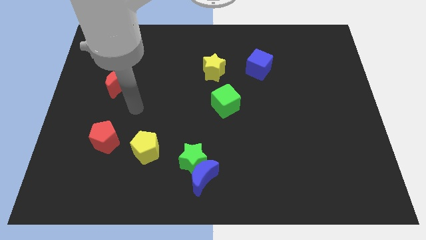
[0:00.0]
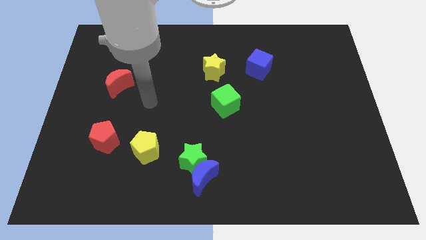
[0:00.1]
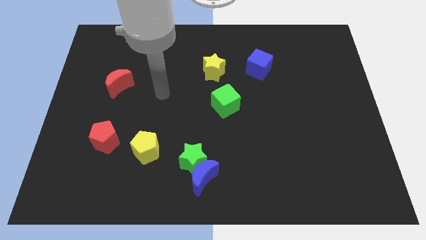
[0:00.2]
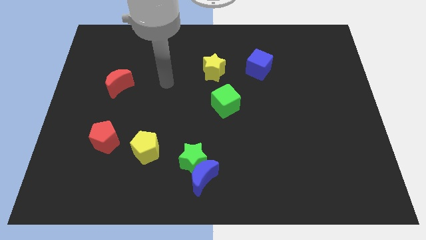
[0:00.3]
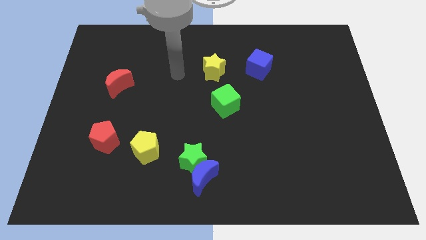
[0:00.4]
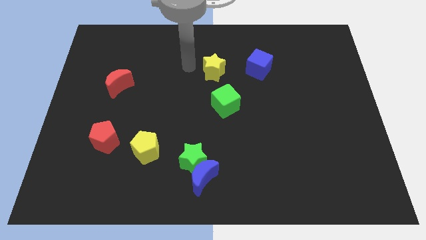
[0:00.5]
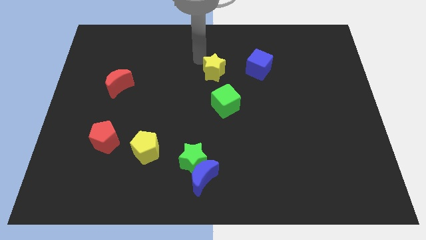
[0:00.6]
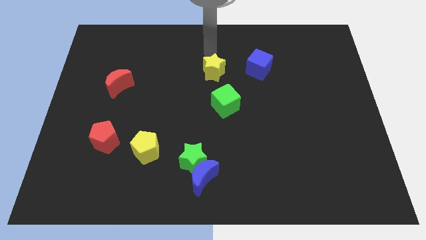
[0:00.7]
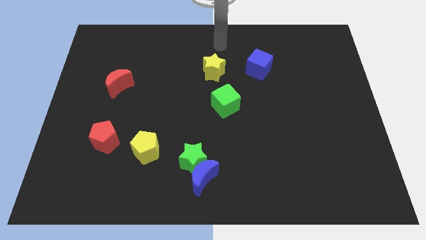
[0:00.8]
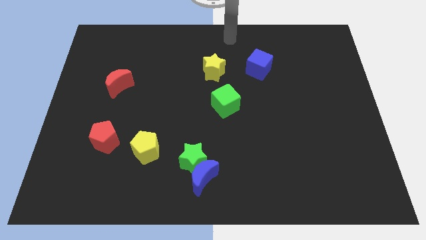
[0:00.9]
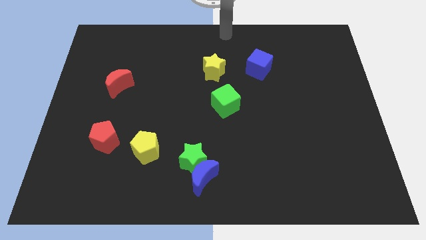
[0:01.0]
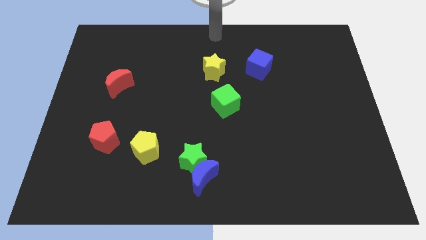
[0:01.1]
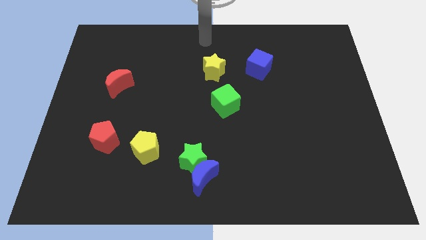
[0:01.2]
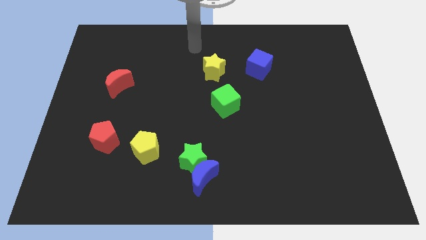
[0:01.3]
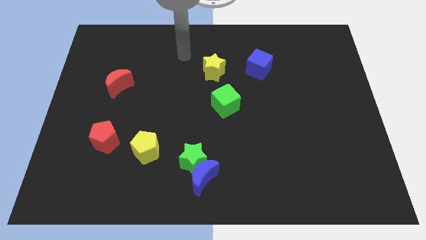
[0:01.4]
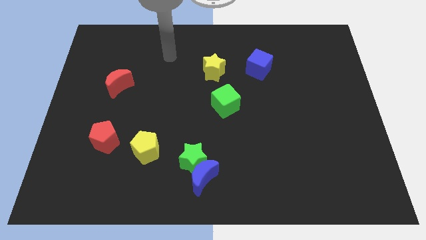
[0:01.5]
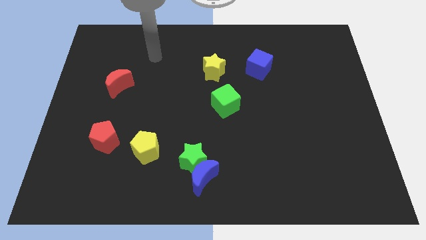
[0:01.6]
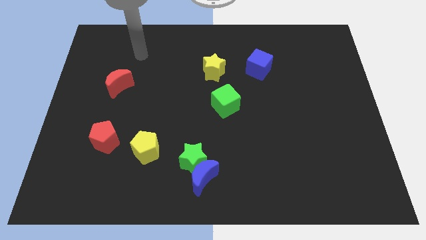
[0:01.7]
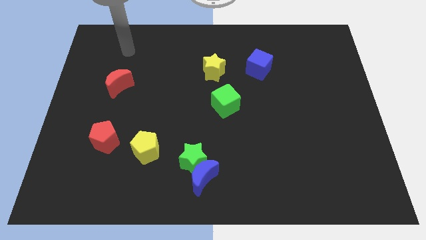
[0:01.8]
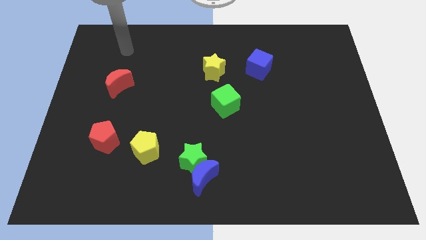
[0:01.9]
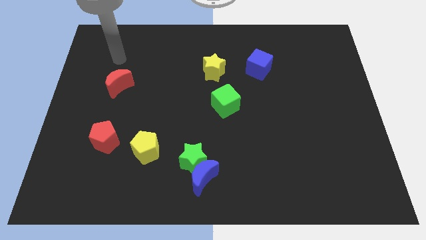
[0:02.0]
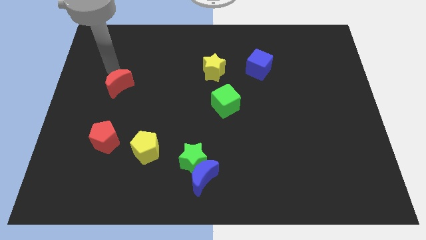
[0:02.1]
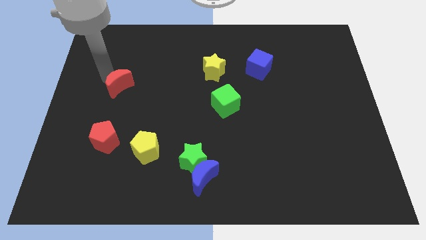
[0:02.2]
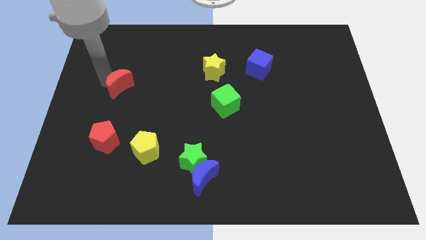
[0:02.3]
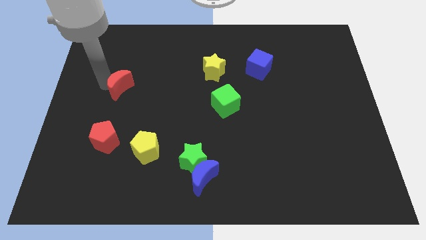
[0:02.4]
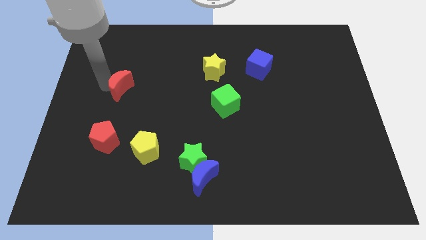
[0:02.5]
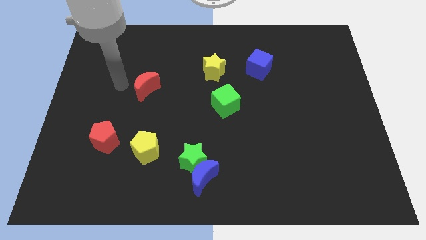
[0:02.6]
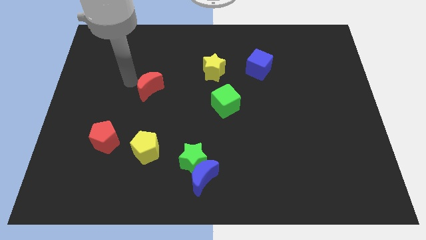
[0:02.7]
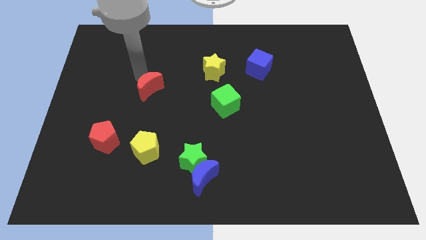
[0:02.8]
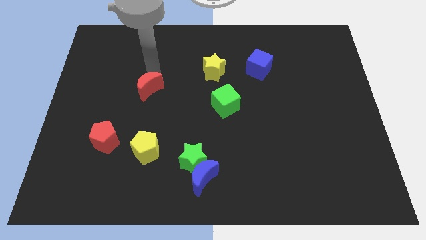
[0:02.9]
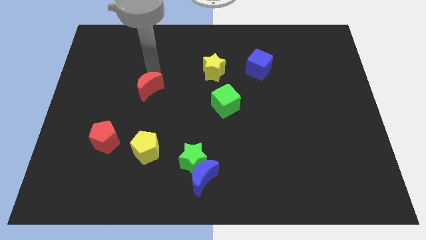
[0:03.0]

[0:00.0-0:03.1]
put the red crescent vertically at the top side of the yellow pentagon

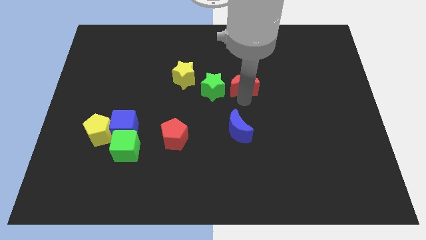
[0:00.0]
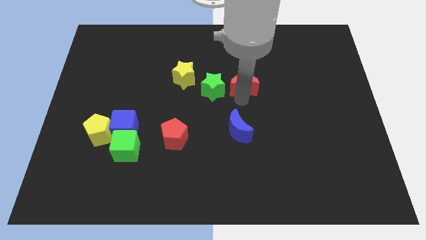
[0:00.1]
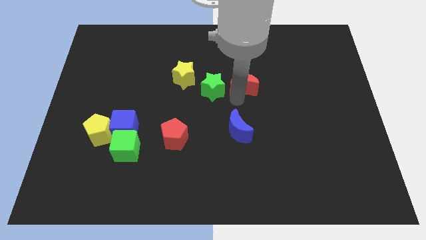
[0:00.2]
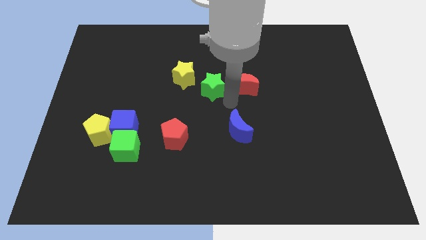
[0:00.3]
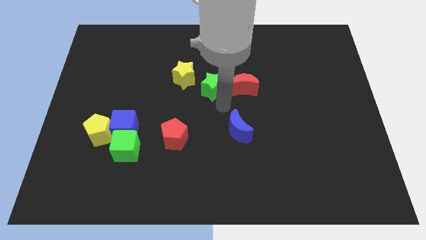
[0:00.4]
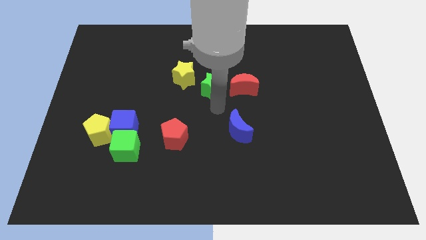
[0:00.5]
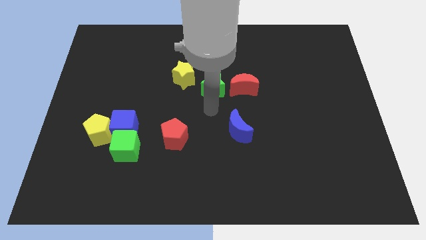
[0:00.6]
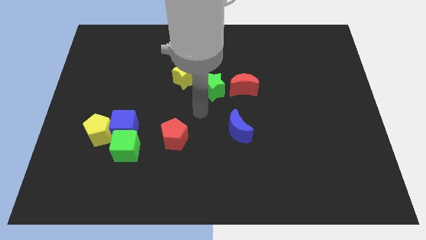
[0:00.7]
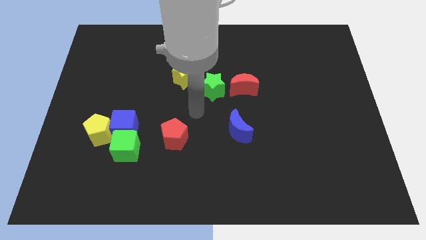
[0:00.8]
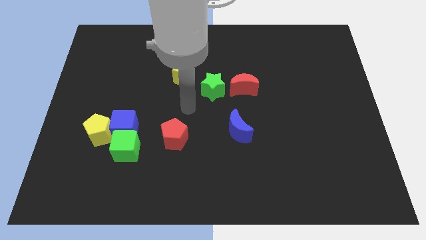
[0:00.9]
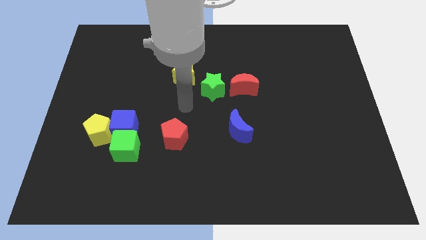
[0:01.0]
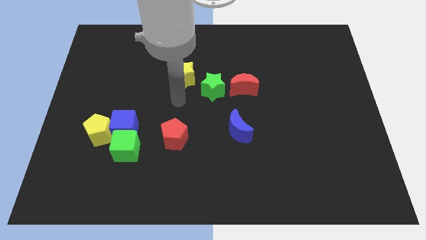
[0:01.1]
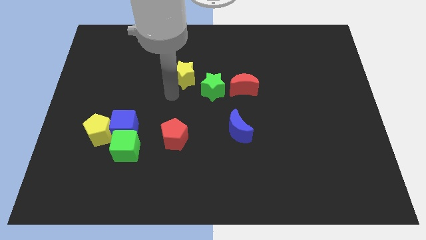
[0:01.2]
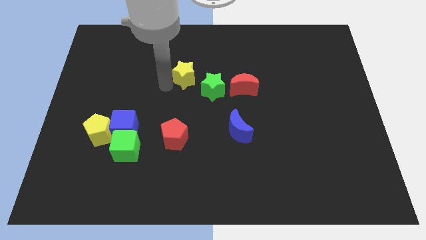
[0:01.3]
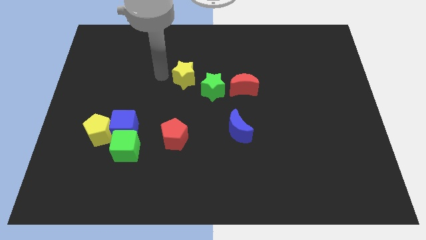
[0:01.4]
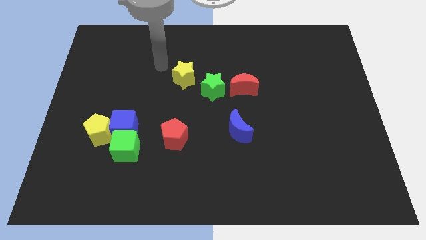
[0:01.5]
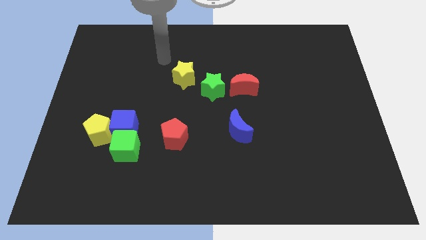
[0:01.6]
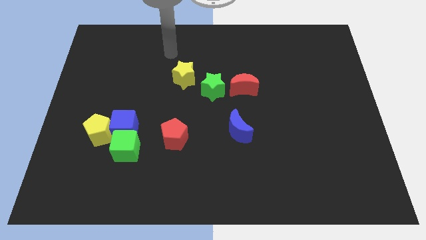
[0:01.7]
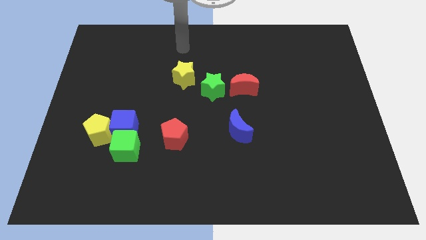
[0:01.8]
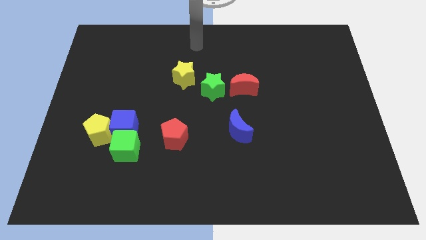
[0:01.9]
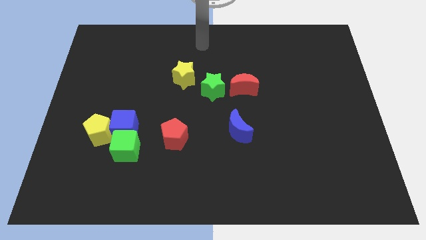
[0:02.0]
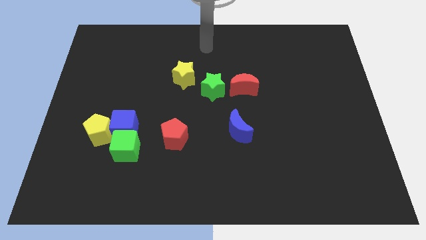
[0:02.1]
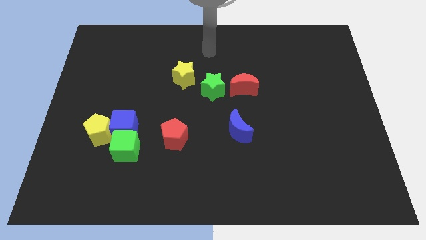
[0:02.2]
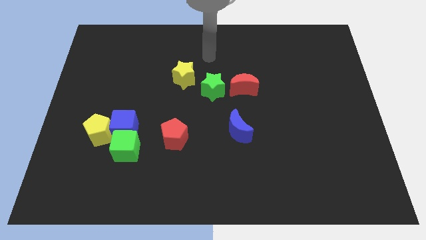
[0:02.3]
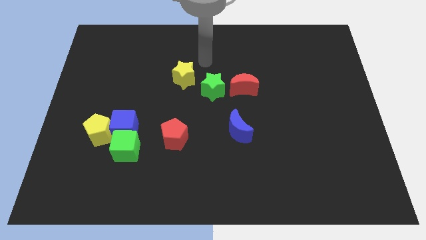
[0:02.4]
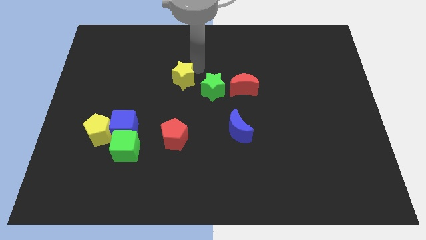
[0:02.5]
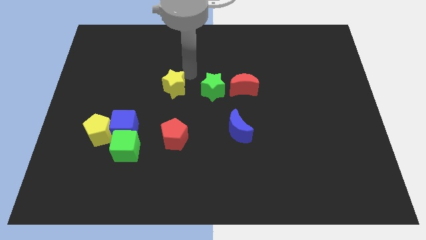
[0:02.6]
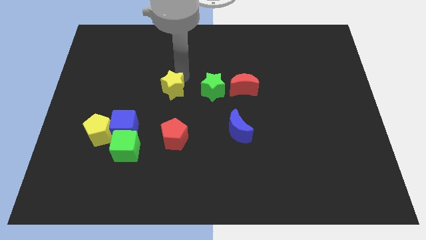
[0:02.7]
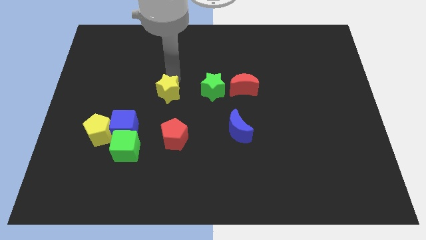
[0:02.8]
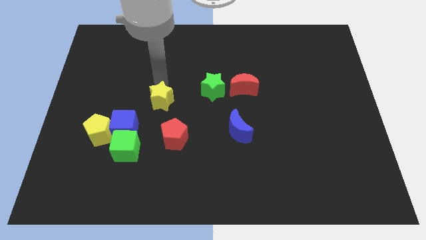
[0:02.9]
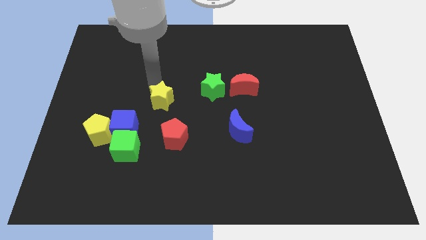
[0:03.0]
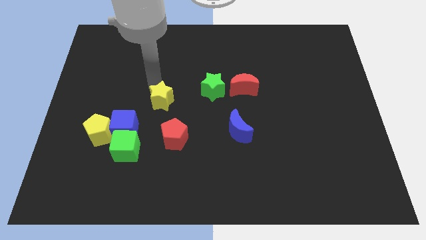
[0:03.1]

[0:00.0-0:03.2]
drag the yellow star diagonally bottom left to the green star

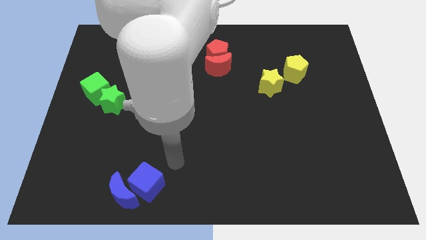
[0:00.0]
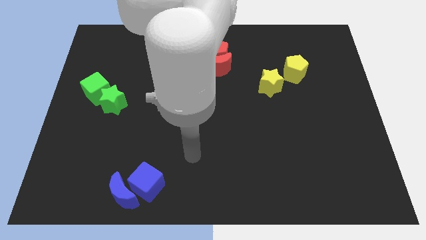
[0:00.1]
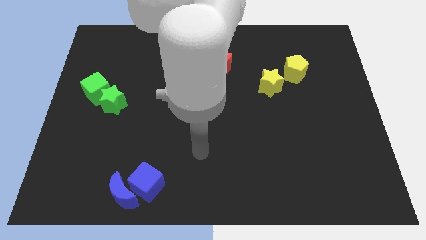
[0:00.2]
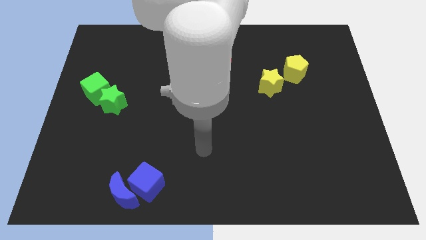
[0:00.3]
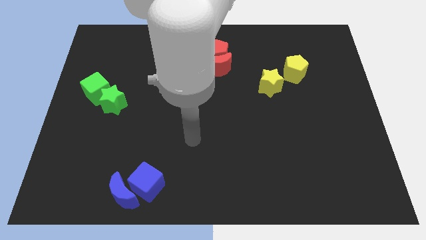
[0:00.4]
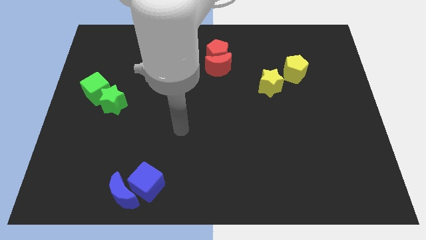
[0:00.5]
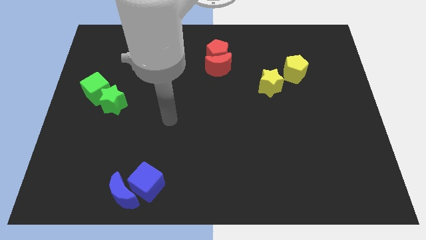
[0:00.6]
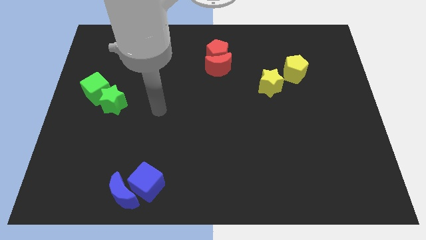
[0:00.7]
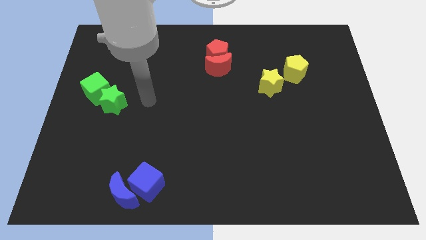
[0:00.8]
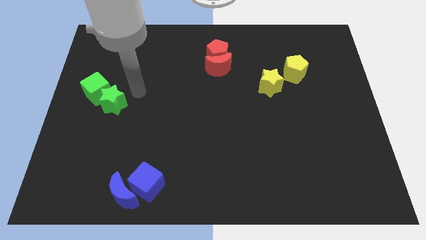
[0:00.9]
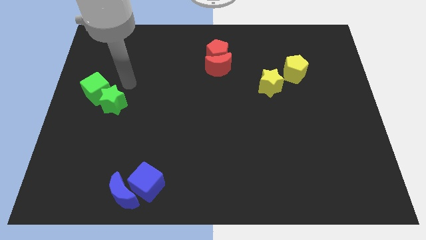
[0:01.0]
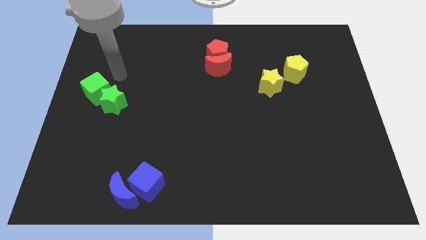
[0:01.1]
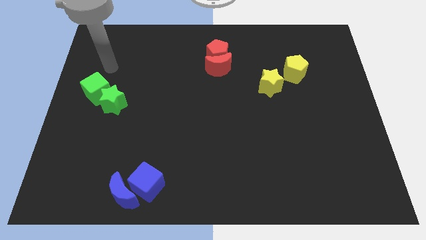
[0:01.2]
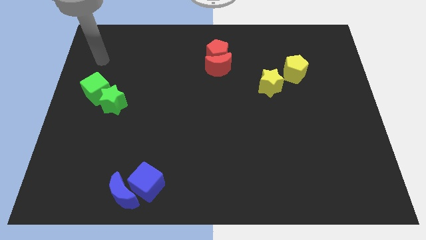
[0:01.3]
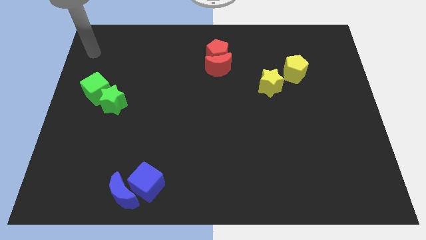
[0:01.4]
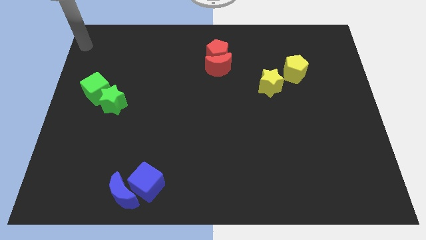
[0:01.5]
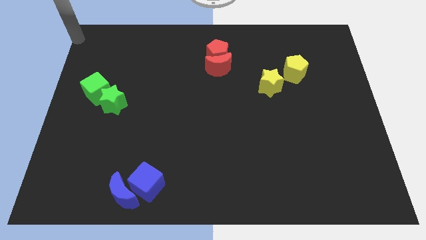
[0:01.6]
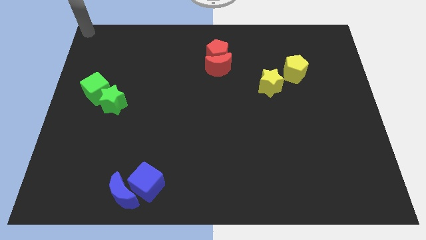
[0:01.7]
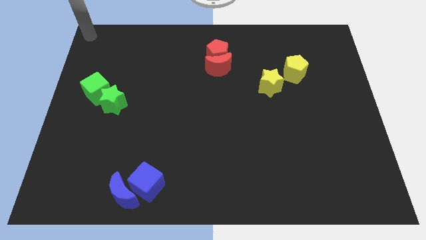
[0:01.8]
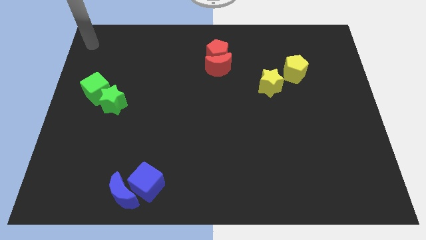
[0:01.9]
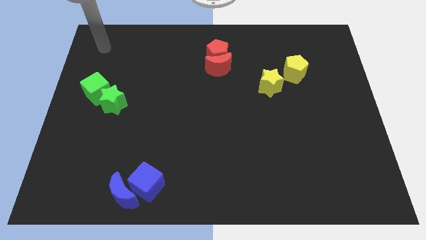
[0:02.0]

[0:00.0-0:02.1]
move the arm to the top left corner of the board

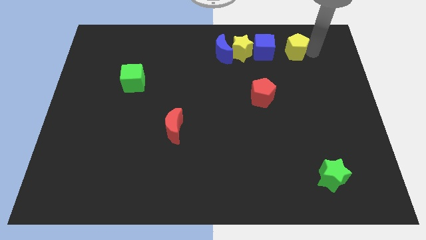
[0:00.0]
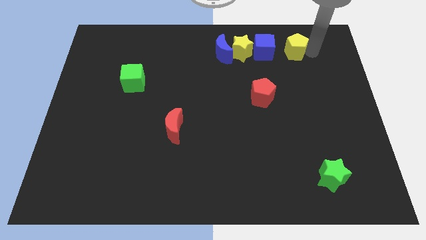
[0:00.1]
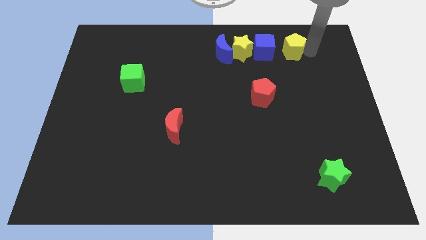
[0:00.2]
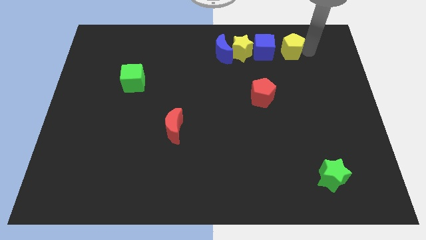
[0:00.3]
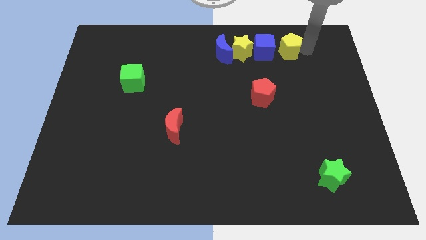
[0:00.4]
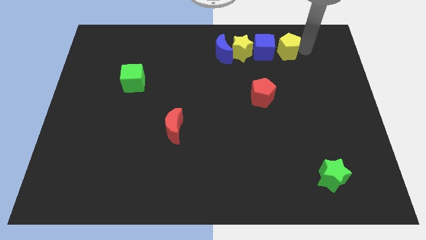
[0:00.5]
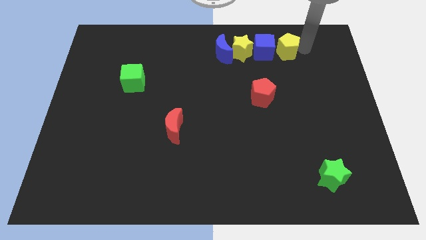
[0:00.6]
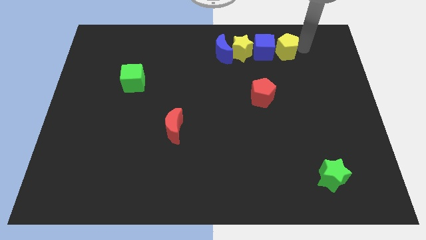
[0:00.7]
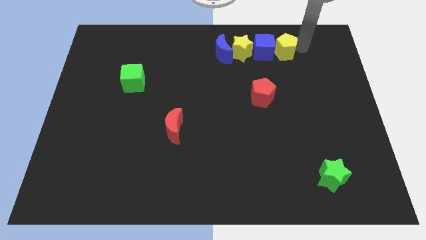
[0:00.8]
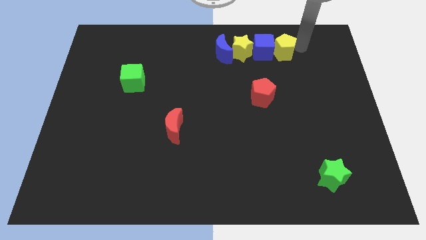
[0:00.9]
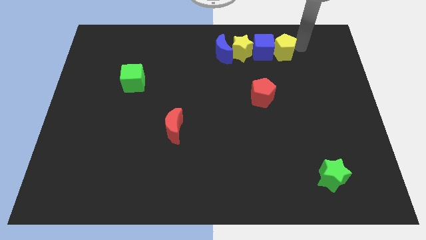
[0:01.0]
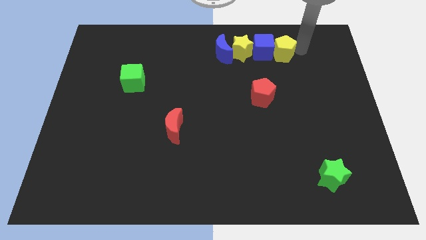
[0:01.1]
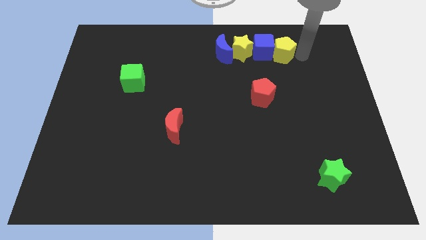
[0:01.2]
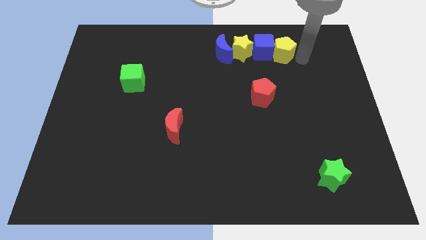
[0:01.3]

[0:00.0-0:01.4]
move the yellow pentagon into the blue cube
